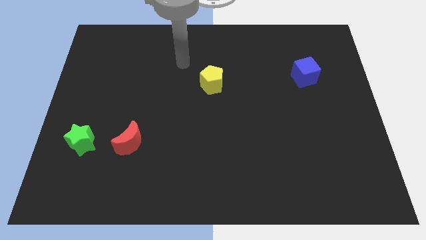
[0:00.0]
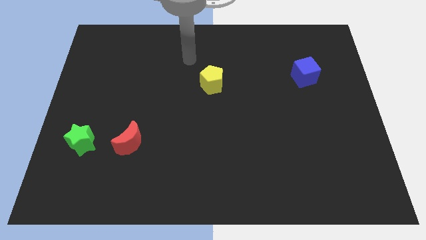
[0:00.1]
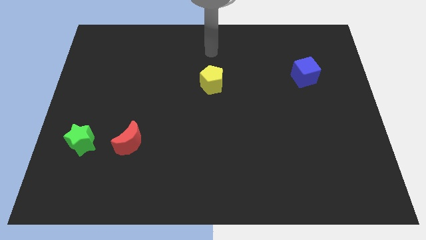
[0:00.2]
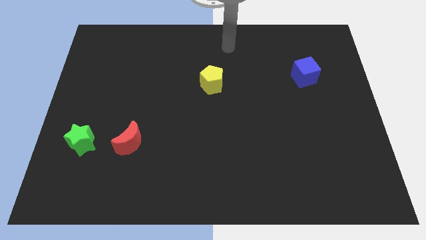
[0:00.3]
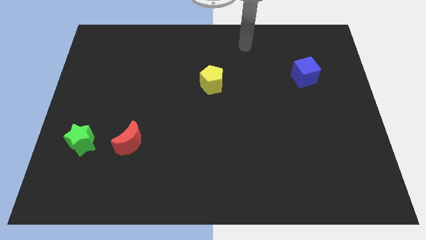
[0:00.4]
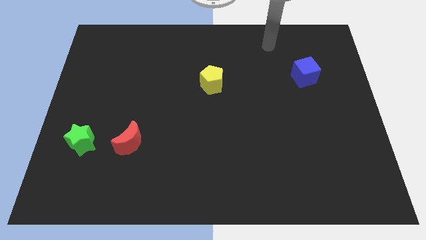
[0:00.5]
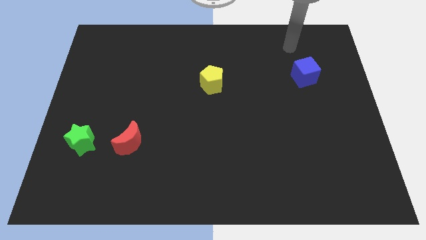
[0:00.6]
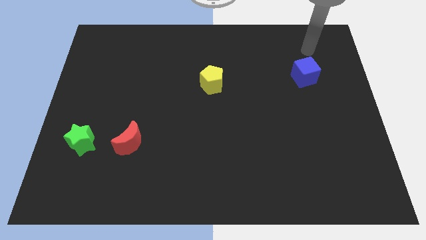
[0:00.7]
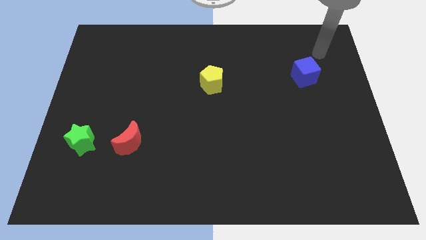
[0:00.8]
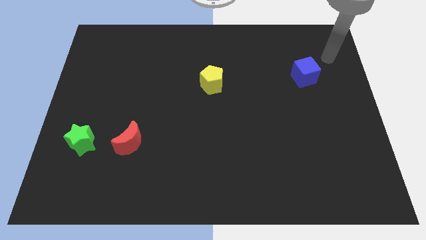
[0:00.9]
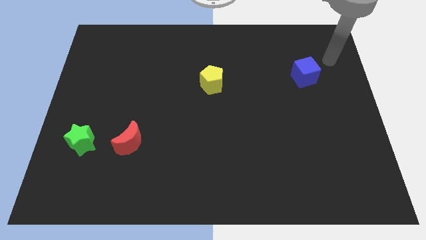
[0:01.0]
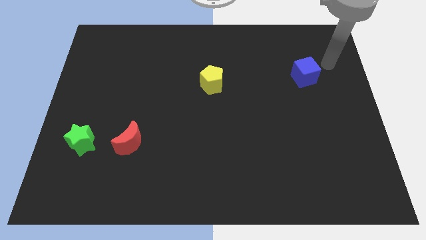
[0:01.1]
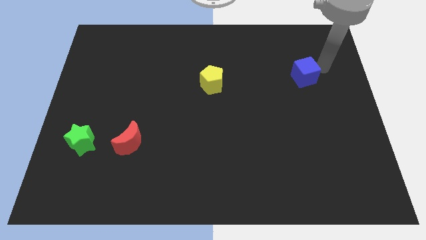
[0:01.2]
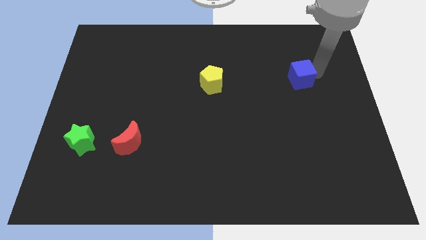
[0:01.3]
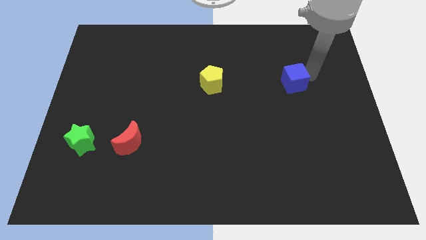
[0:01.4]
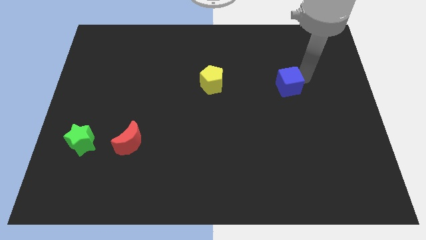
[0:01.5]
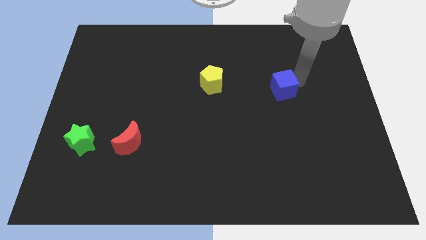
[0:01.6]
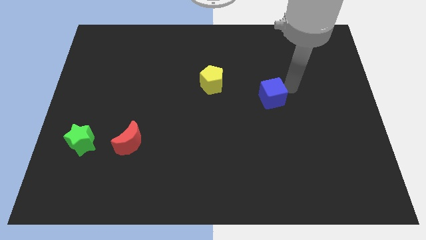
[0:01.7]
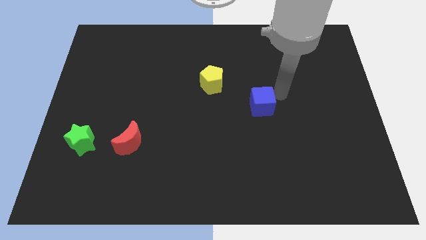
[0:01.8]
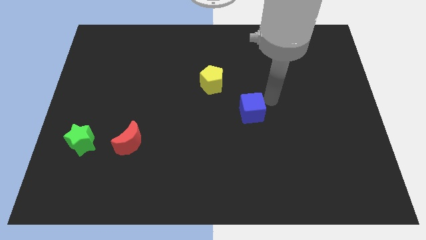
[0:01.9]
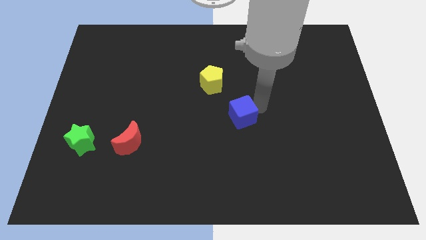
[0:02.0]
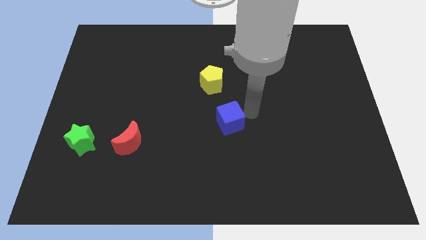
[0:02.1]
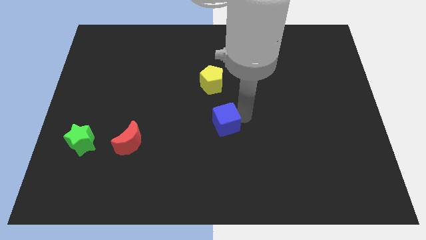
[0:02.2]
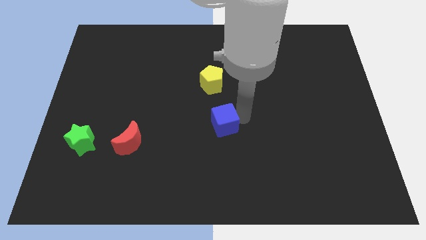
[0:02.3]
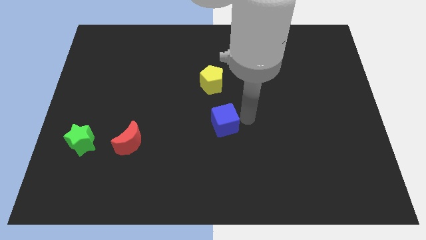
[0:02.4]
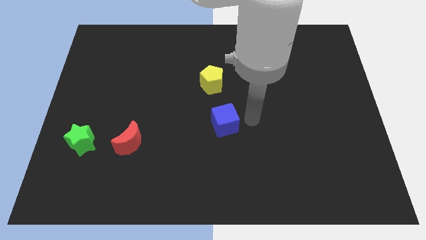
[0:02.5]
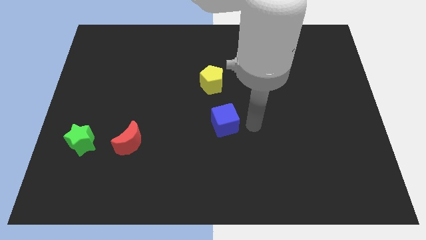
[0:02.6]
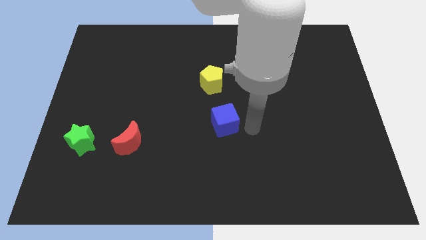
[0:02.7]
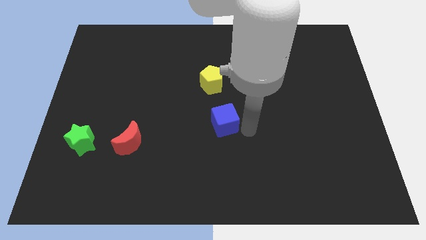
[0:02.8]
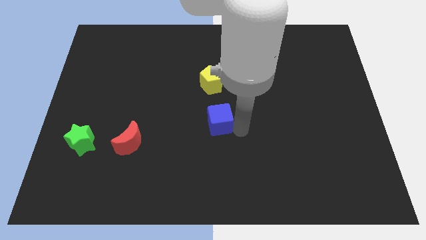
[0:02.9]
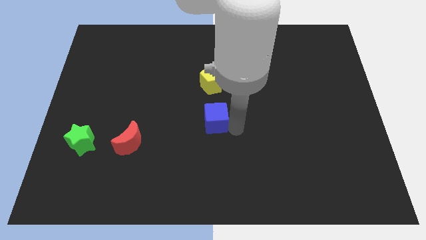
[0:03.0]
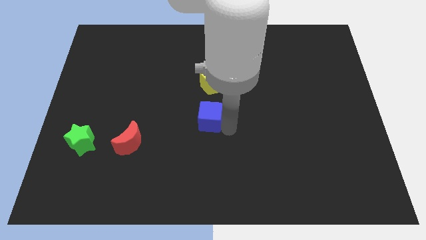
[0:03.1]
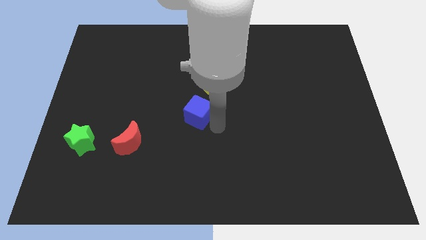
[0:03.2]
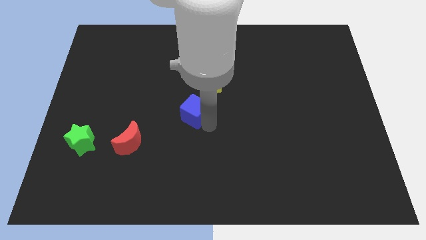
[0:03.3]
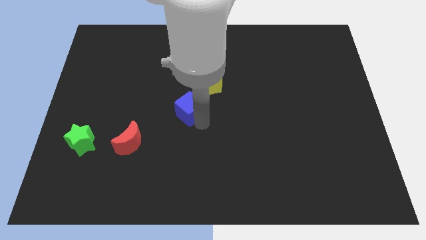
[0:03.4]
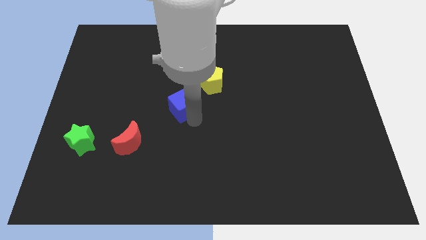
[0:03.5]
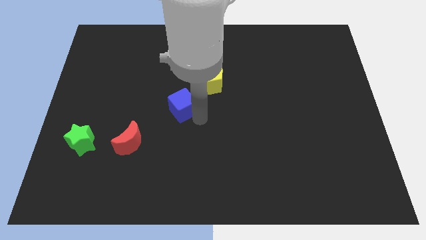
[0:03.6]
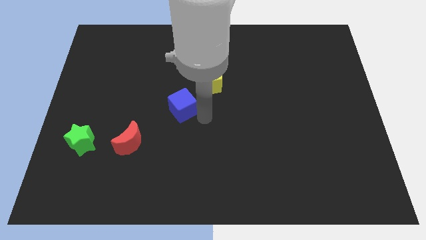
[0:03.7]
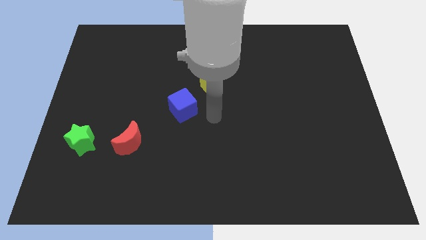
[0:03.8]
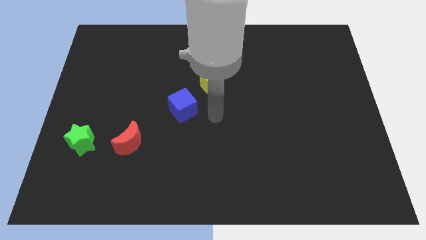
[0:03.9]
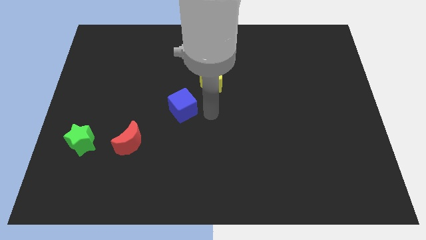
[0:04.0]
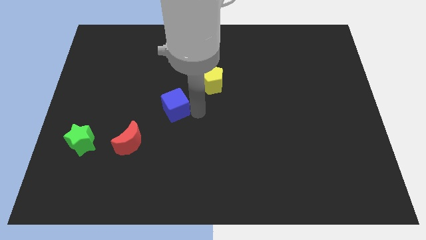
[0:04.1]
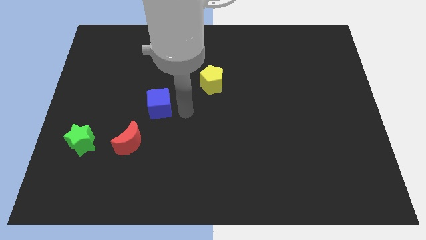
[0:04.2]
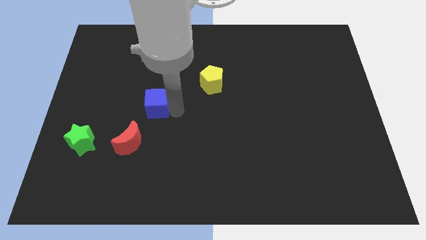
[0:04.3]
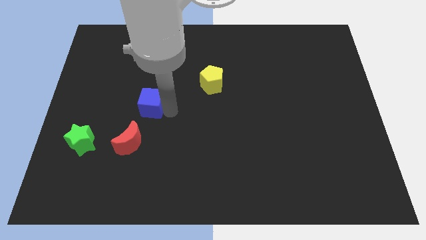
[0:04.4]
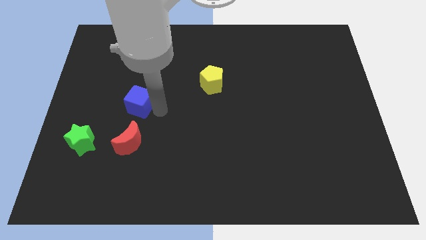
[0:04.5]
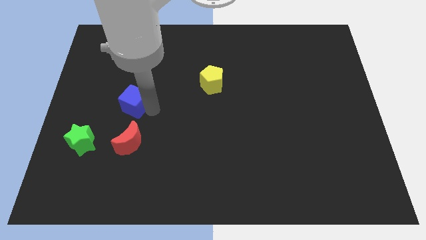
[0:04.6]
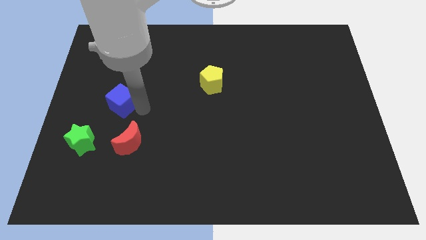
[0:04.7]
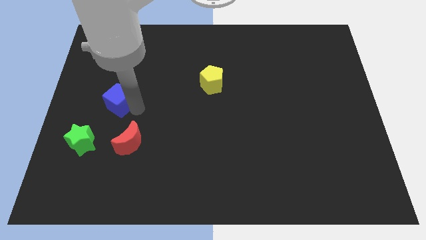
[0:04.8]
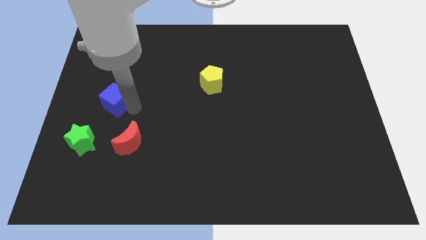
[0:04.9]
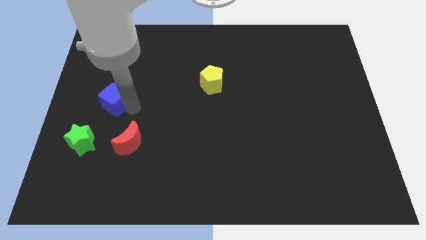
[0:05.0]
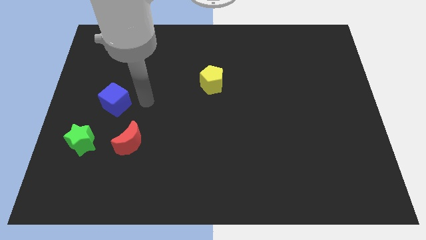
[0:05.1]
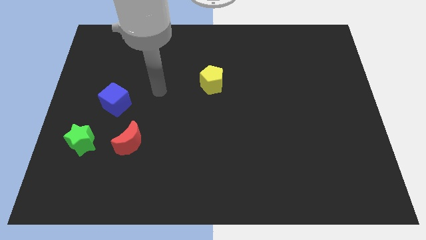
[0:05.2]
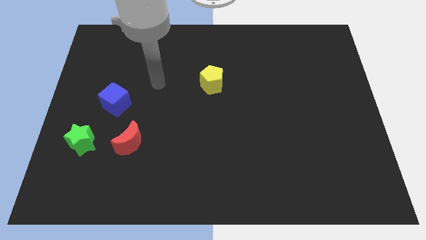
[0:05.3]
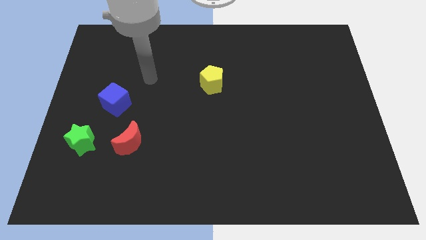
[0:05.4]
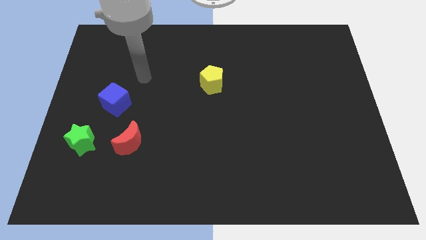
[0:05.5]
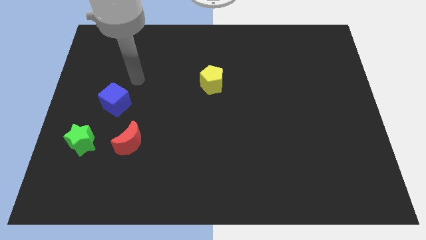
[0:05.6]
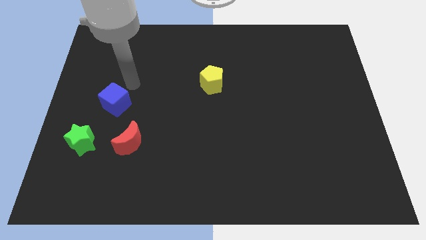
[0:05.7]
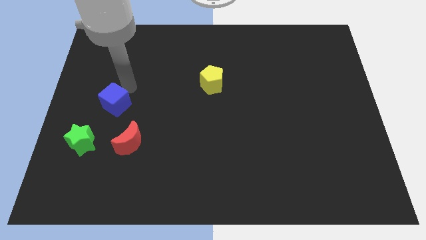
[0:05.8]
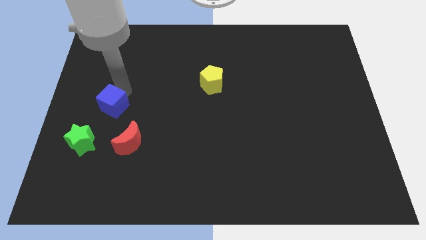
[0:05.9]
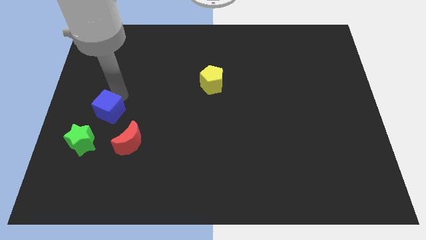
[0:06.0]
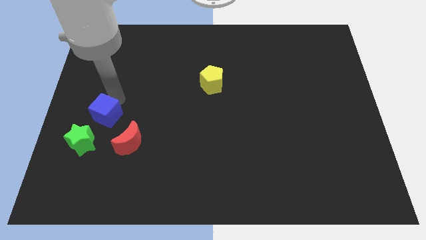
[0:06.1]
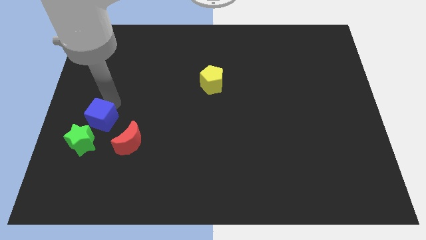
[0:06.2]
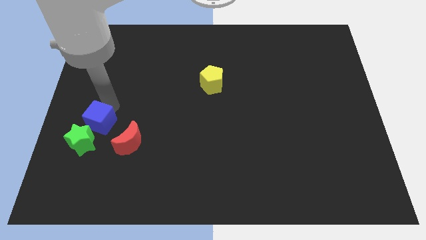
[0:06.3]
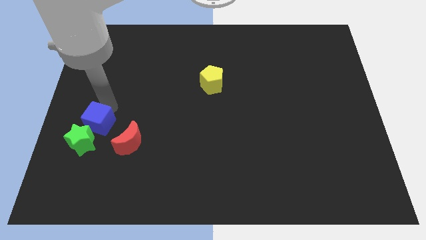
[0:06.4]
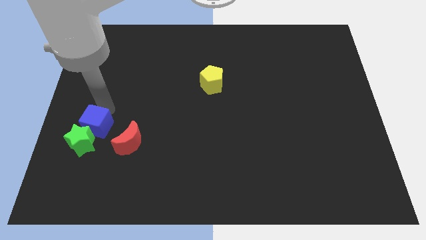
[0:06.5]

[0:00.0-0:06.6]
put the cube next to the green block

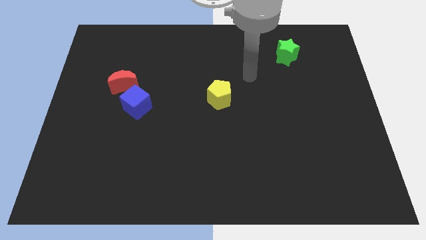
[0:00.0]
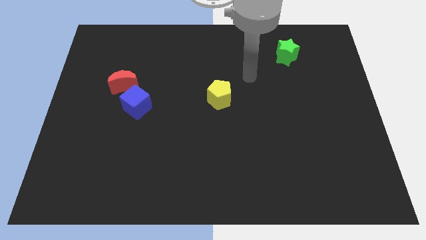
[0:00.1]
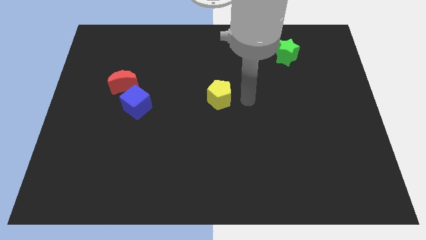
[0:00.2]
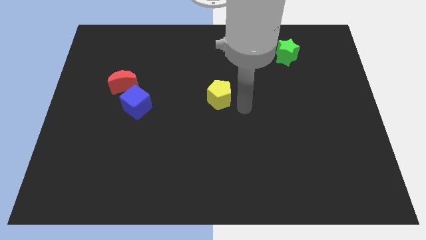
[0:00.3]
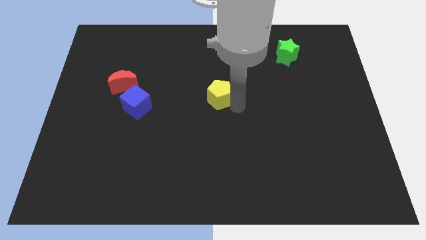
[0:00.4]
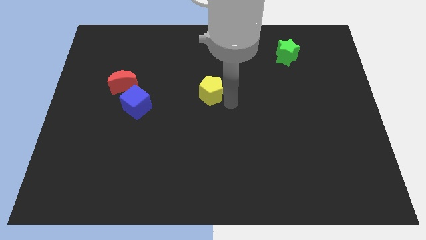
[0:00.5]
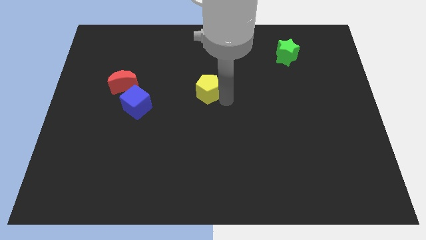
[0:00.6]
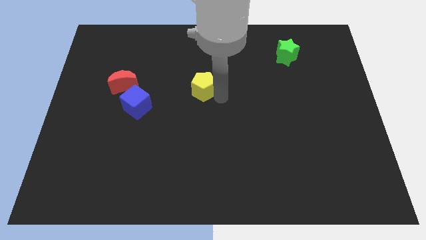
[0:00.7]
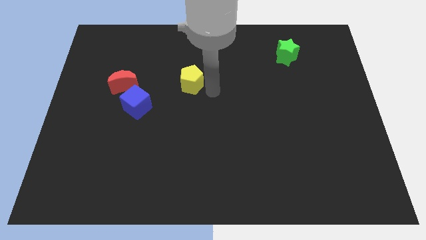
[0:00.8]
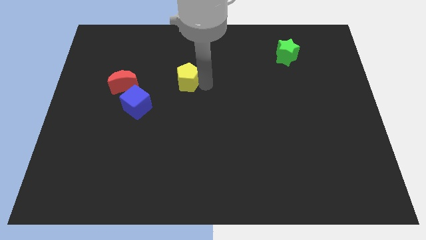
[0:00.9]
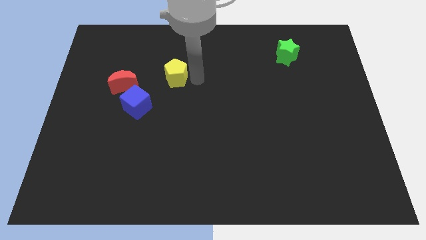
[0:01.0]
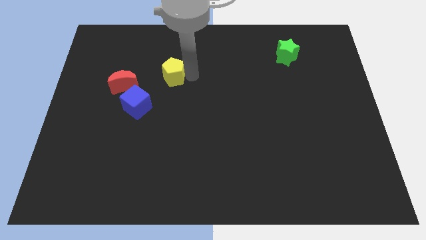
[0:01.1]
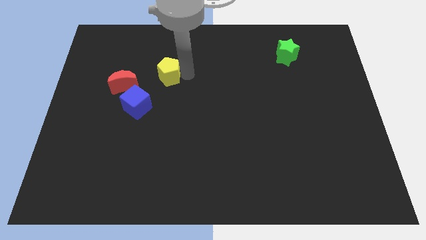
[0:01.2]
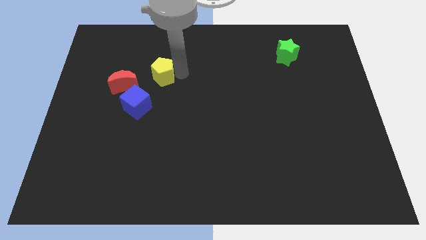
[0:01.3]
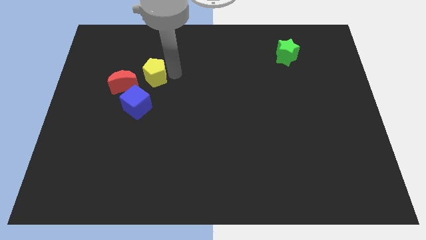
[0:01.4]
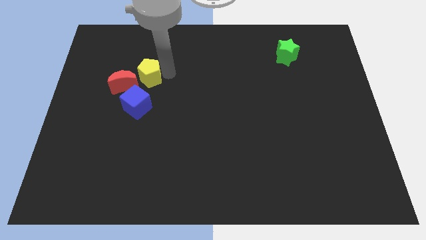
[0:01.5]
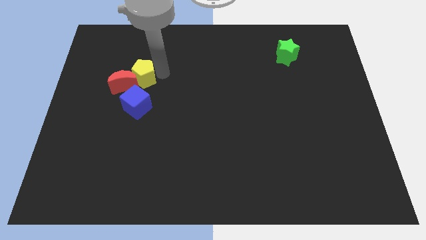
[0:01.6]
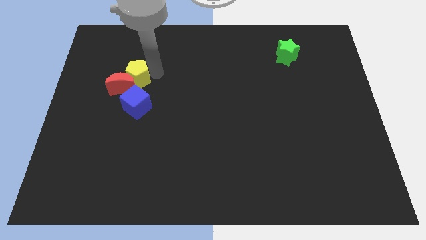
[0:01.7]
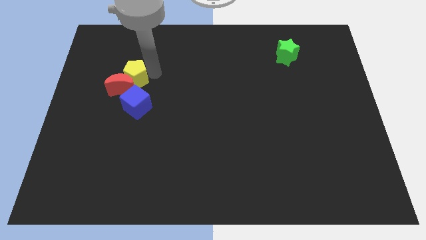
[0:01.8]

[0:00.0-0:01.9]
push the yellow pentagon close to the red block
